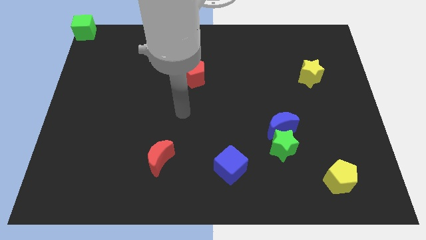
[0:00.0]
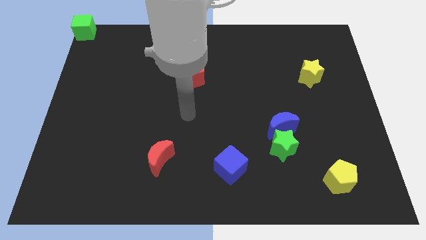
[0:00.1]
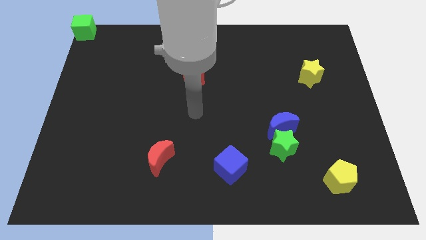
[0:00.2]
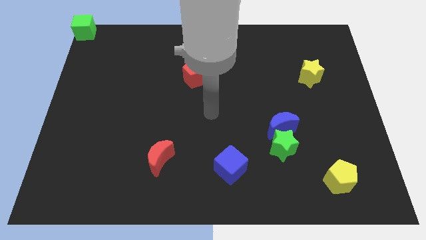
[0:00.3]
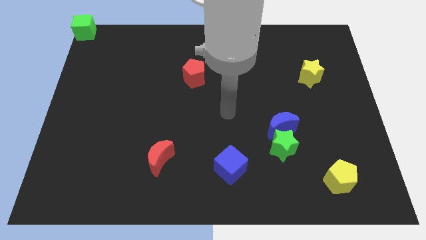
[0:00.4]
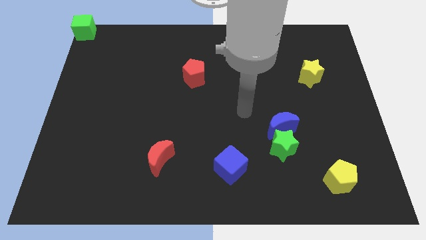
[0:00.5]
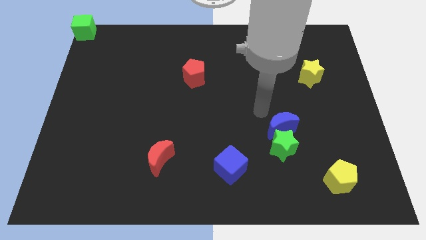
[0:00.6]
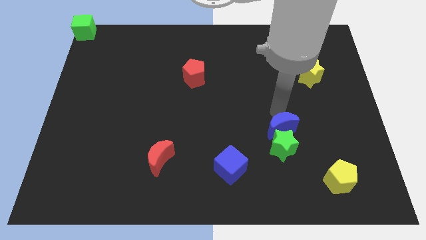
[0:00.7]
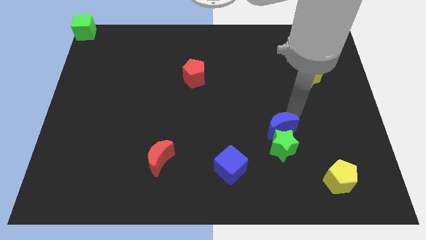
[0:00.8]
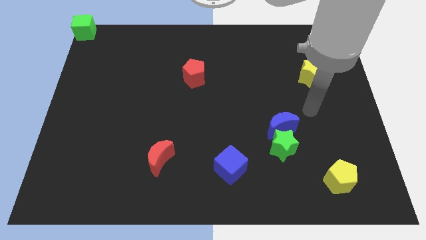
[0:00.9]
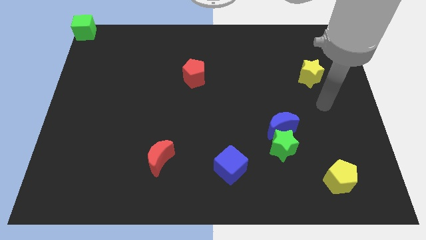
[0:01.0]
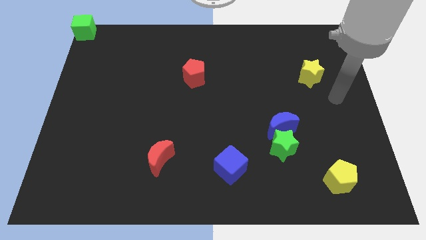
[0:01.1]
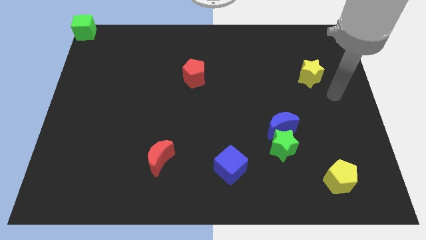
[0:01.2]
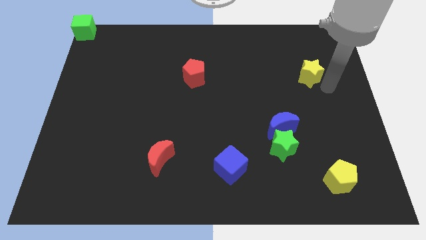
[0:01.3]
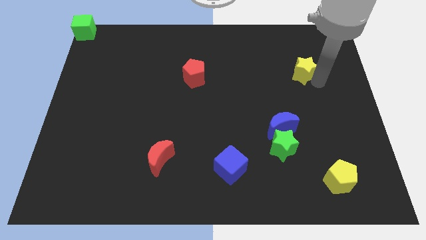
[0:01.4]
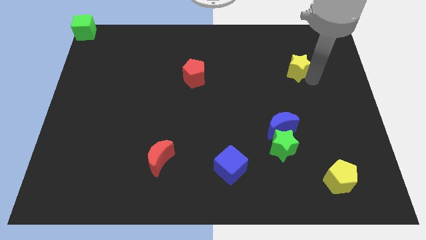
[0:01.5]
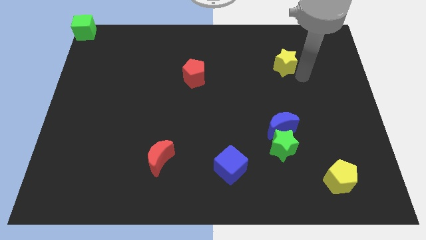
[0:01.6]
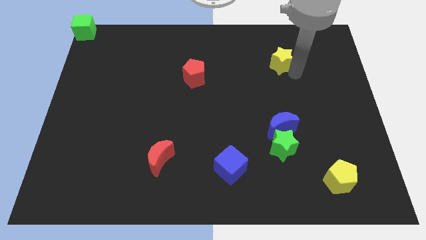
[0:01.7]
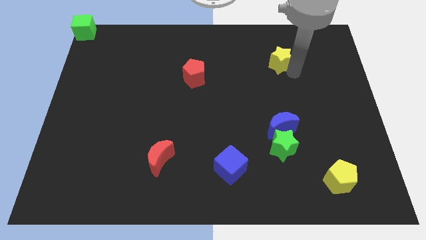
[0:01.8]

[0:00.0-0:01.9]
point your arm right to yellow star

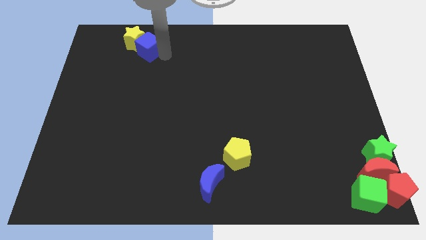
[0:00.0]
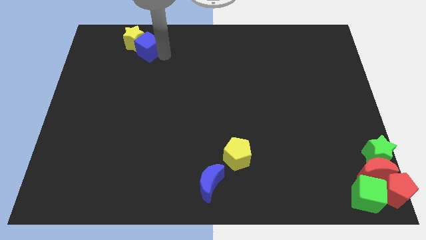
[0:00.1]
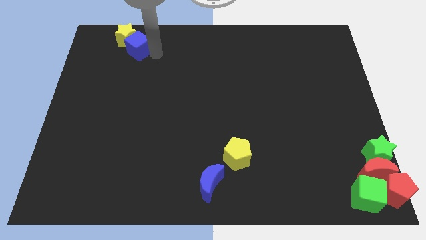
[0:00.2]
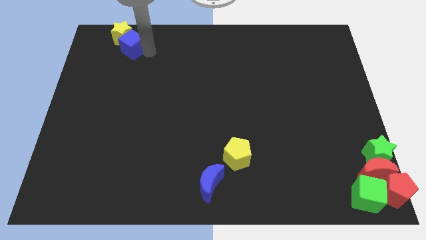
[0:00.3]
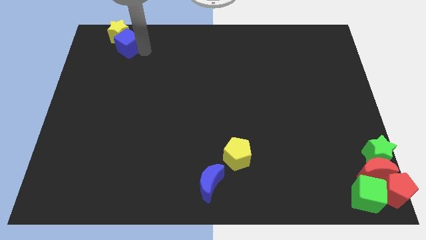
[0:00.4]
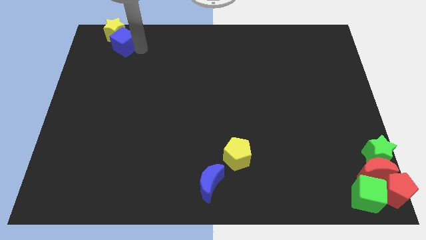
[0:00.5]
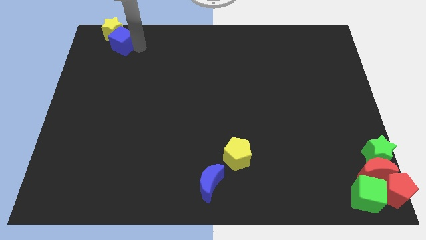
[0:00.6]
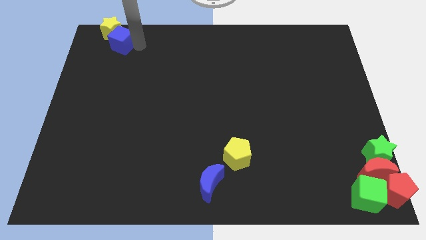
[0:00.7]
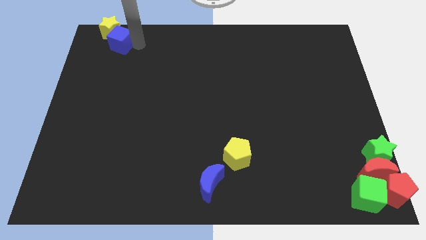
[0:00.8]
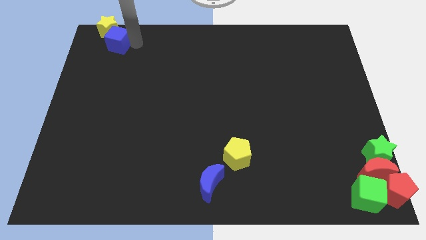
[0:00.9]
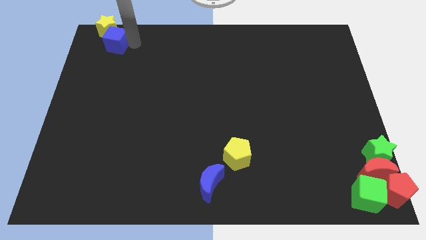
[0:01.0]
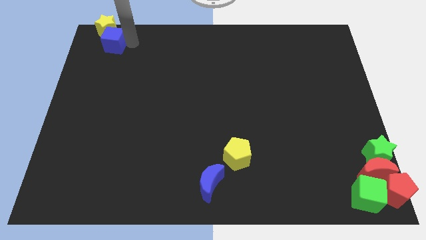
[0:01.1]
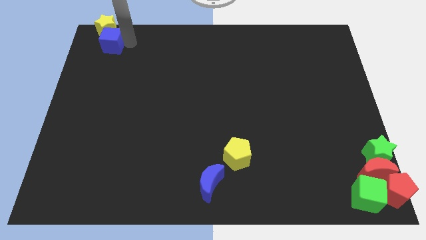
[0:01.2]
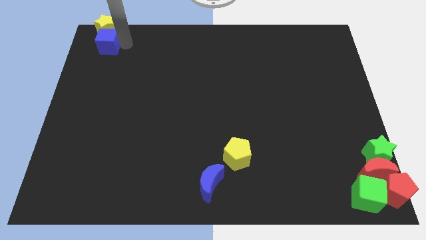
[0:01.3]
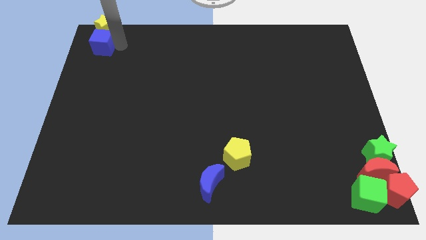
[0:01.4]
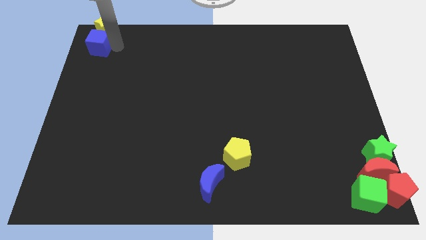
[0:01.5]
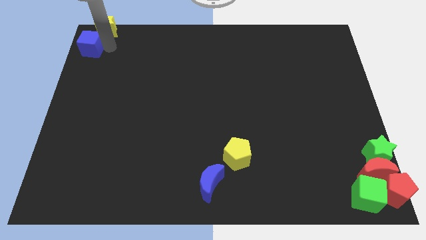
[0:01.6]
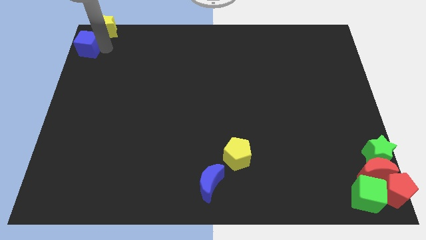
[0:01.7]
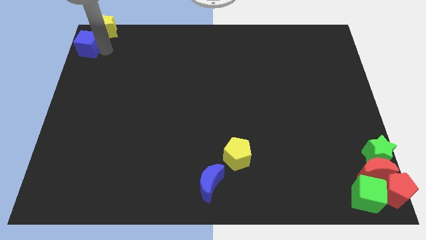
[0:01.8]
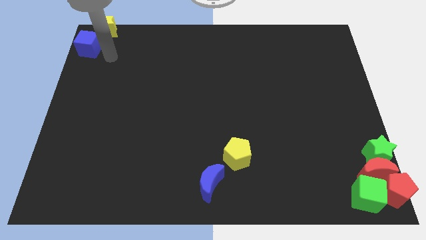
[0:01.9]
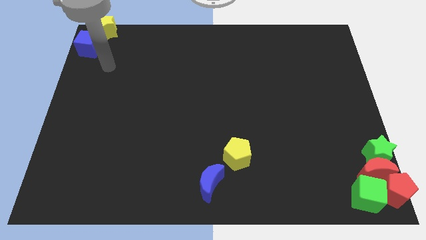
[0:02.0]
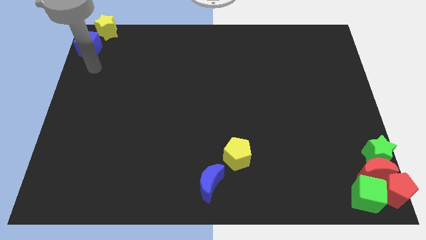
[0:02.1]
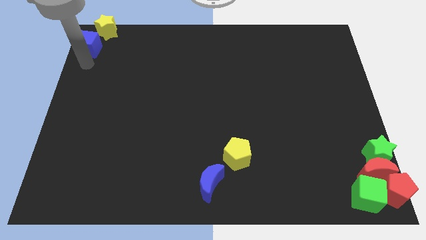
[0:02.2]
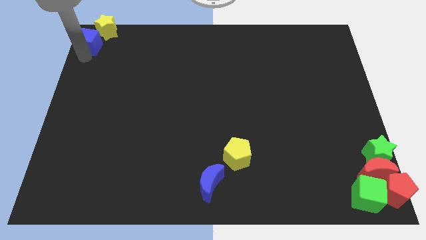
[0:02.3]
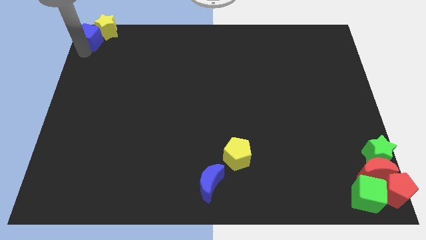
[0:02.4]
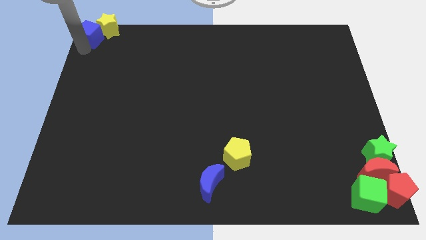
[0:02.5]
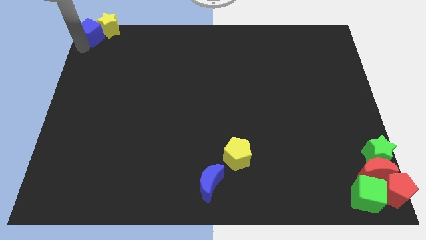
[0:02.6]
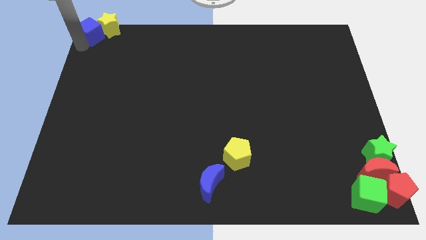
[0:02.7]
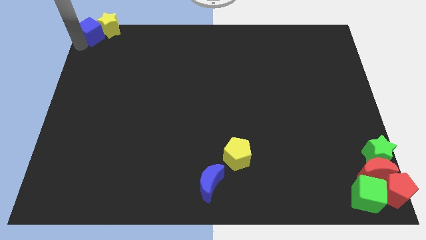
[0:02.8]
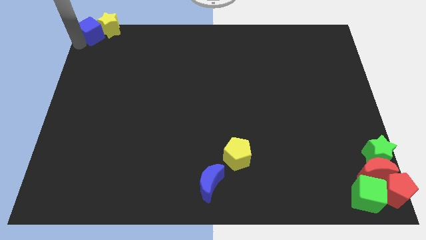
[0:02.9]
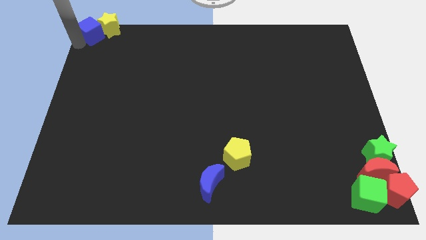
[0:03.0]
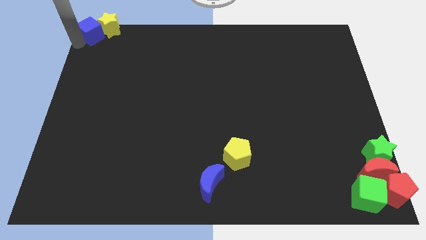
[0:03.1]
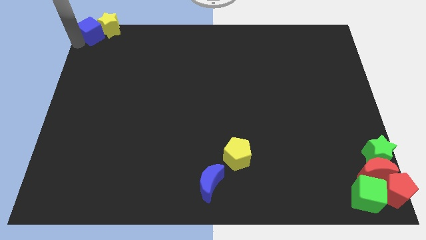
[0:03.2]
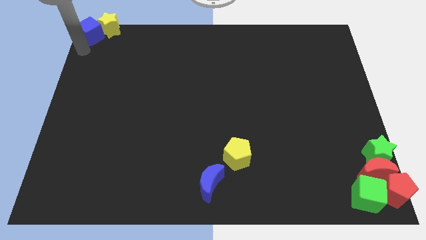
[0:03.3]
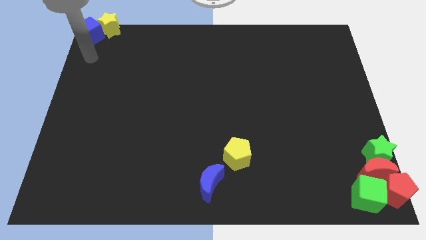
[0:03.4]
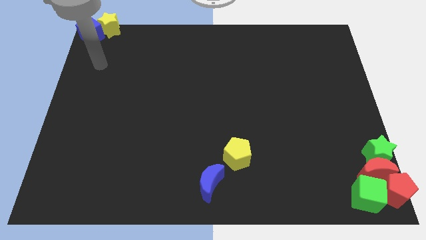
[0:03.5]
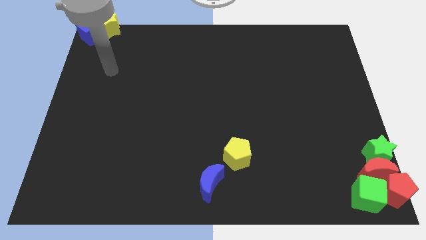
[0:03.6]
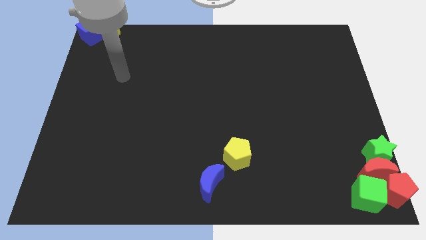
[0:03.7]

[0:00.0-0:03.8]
place the blue cube and yellow star at top left corner of the board

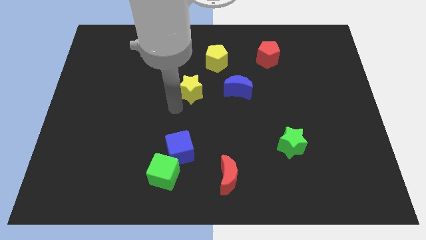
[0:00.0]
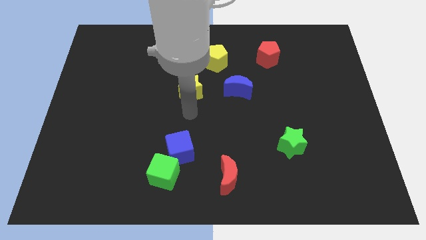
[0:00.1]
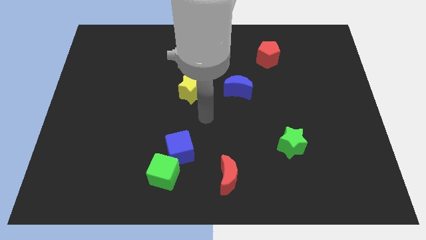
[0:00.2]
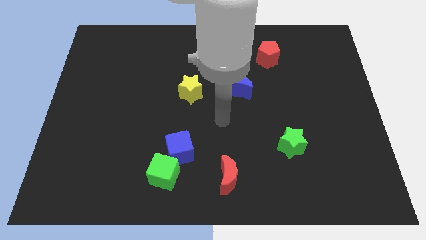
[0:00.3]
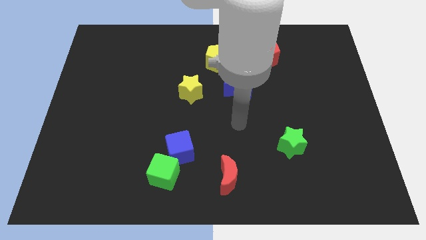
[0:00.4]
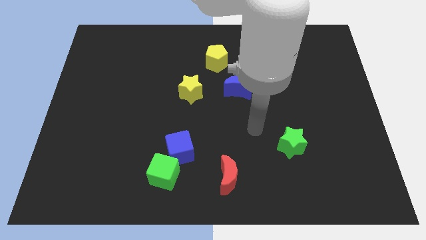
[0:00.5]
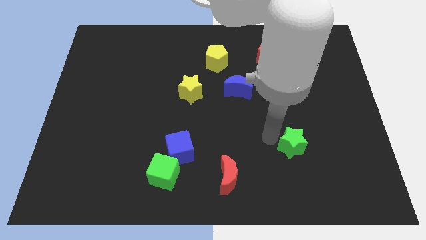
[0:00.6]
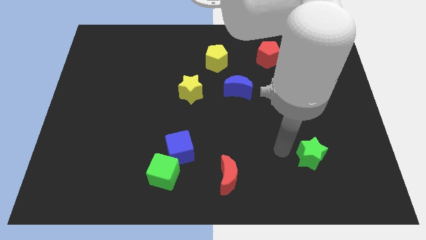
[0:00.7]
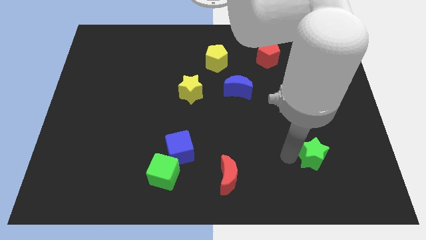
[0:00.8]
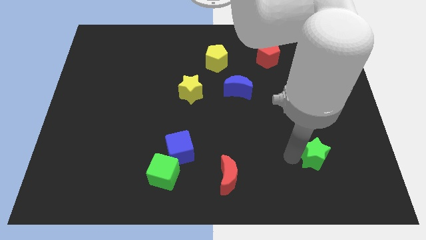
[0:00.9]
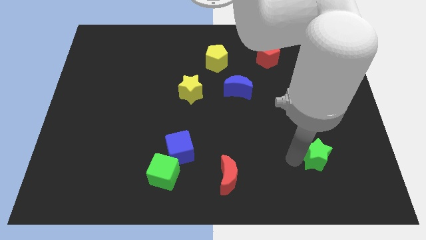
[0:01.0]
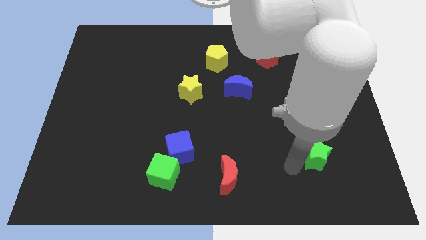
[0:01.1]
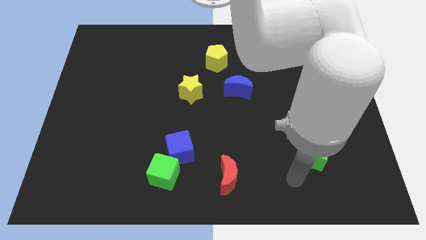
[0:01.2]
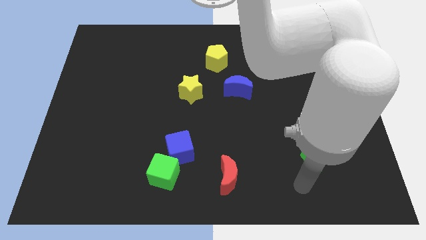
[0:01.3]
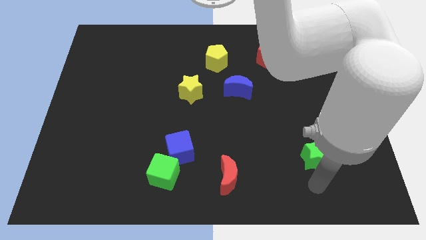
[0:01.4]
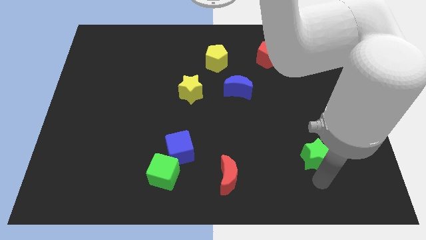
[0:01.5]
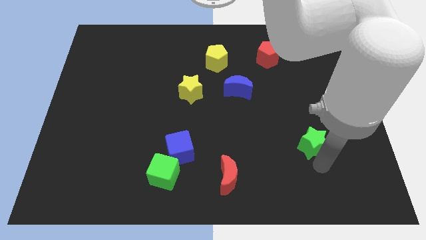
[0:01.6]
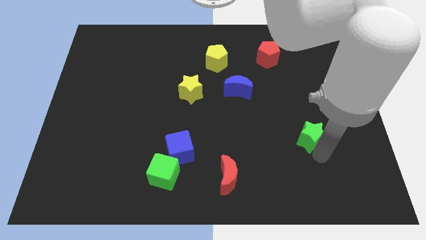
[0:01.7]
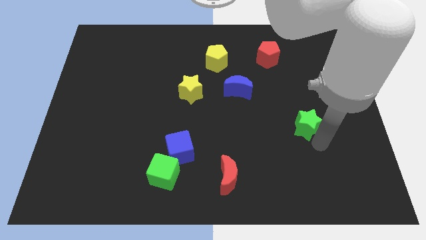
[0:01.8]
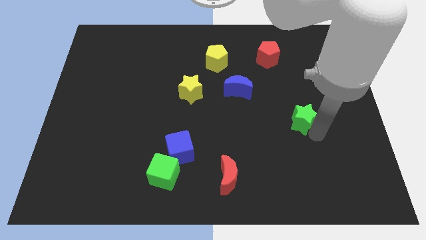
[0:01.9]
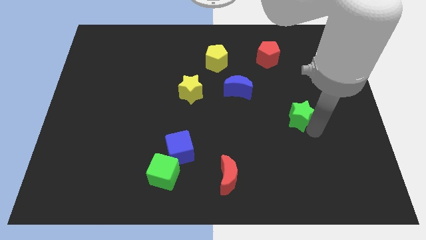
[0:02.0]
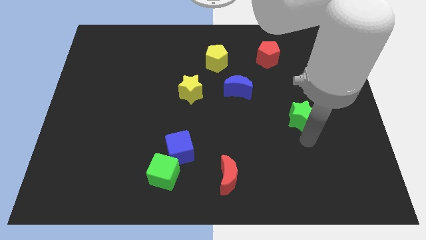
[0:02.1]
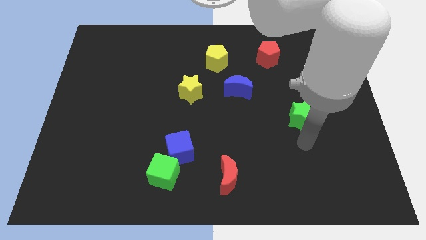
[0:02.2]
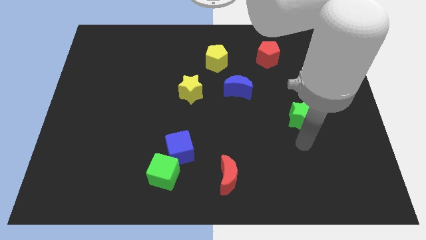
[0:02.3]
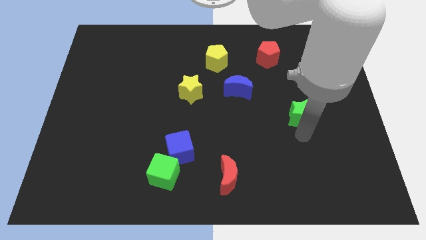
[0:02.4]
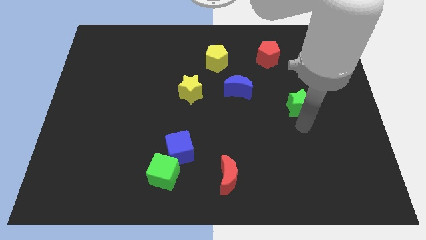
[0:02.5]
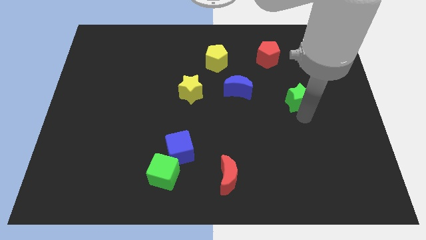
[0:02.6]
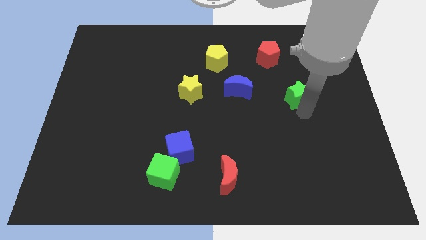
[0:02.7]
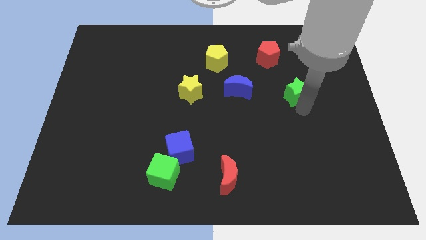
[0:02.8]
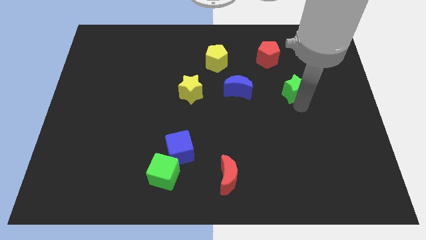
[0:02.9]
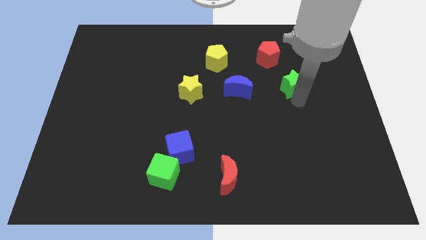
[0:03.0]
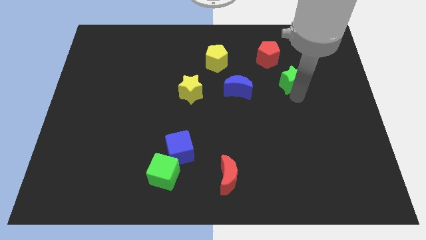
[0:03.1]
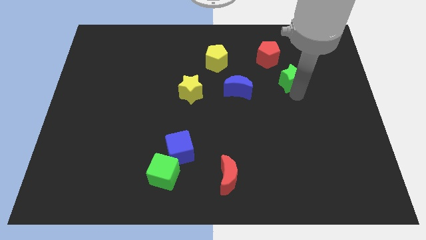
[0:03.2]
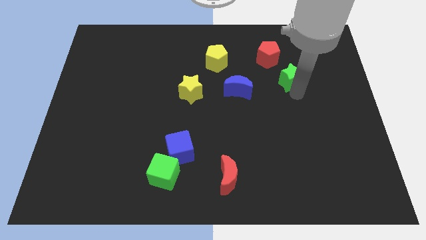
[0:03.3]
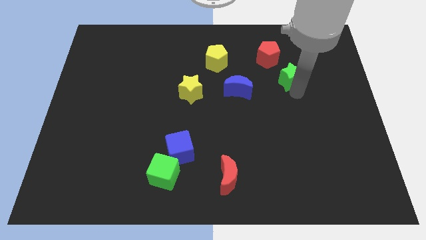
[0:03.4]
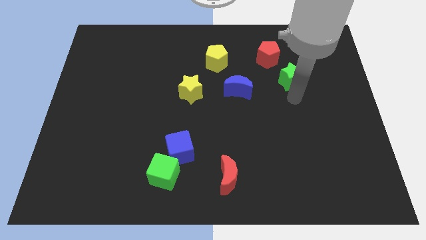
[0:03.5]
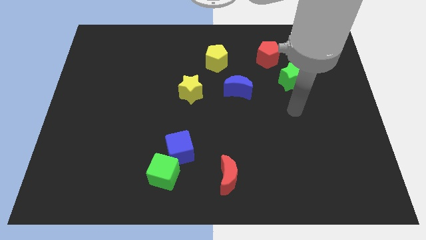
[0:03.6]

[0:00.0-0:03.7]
move the green star to the right of blue crescent
